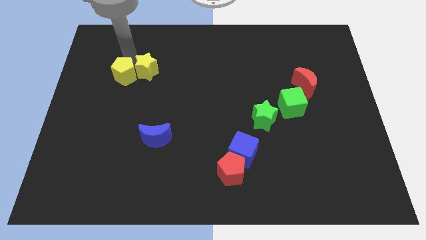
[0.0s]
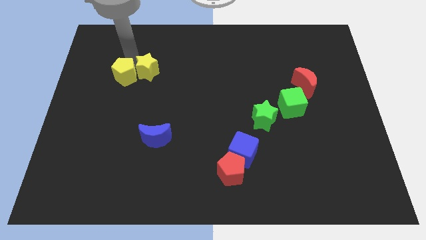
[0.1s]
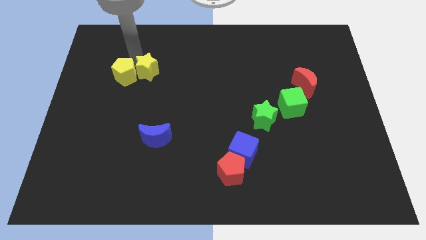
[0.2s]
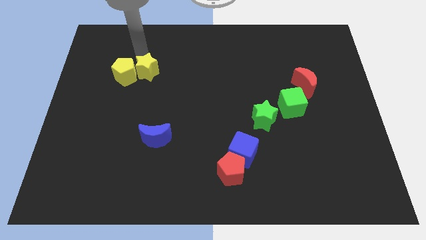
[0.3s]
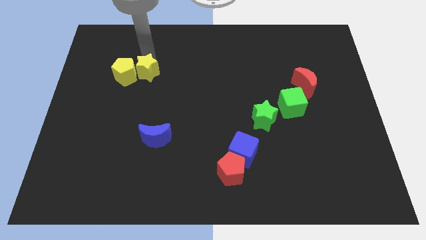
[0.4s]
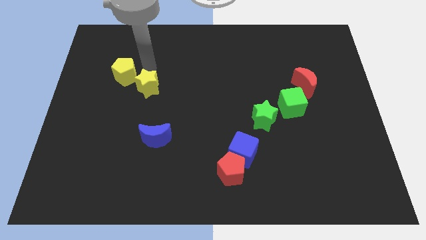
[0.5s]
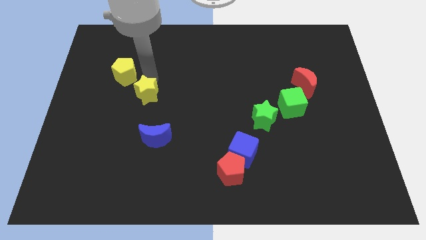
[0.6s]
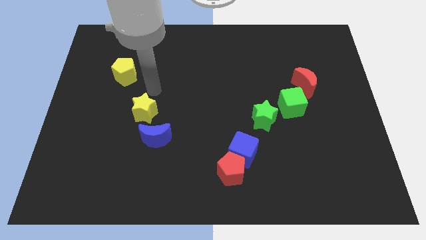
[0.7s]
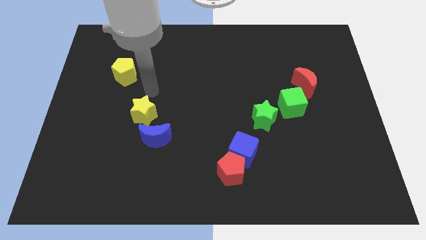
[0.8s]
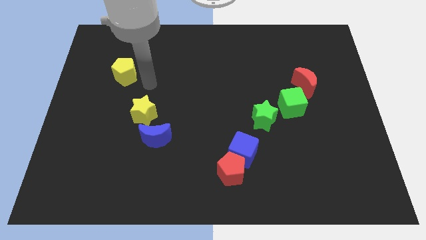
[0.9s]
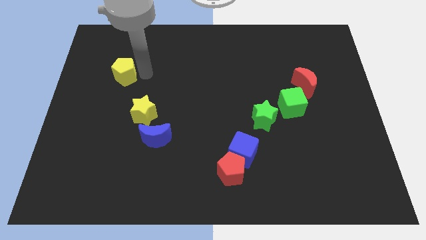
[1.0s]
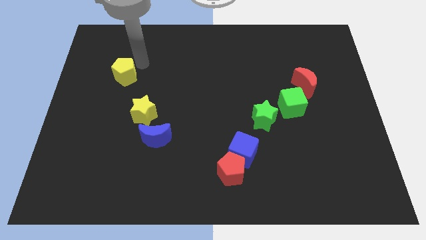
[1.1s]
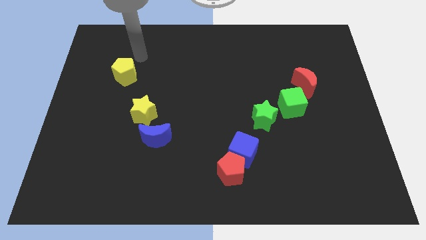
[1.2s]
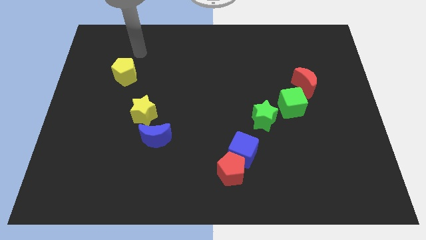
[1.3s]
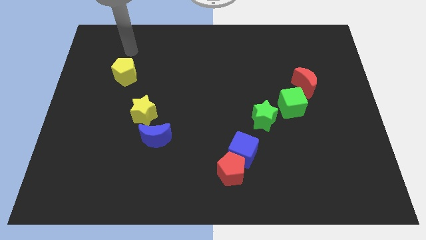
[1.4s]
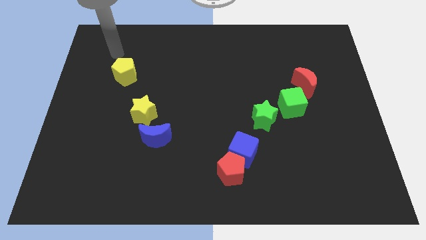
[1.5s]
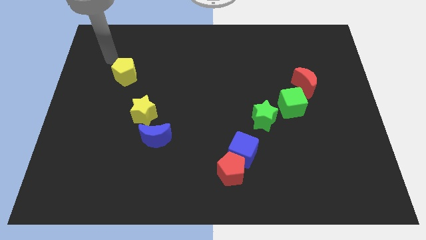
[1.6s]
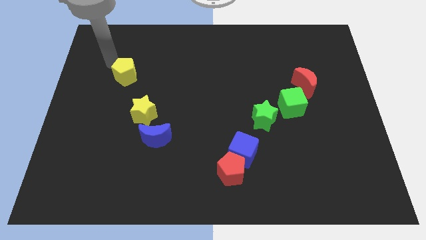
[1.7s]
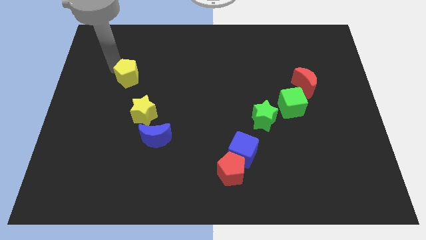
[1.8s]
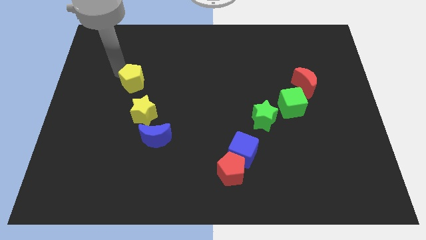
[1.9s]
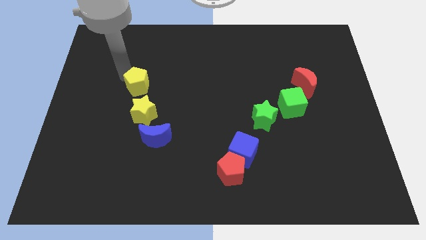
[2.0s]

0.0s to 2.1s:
move yellow star to the top of the blue crescent

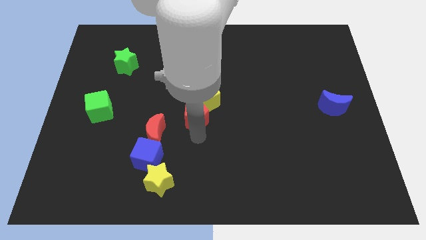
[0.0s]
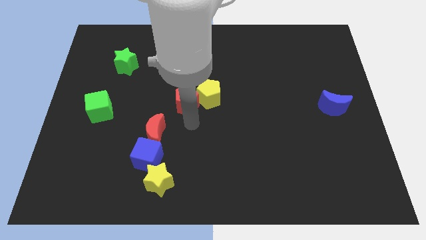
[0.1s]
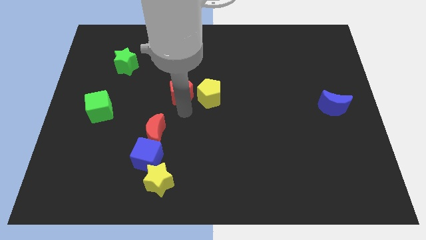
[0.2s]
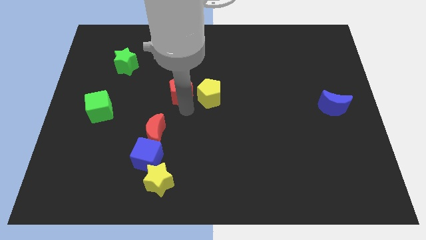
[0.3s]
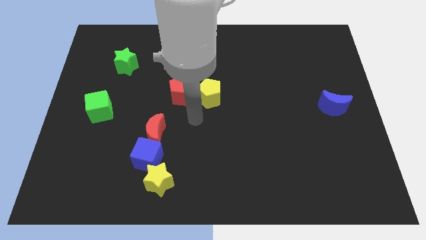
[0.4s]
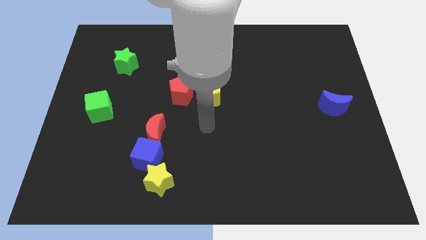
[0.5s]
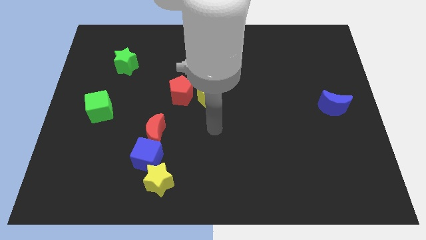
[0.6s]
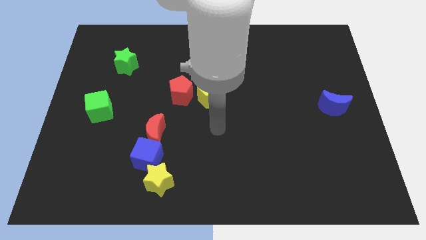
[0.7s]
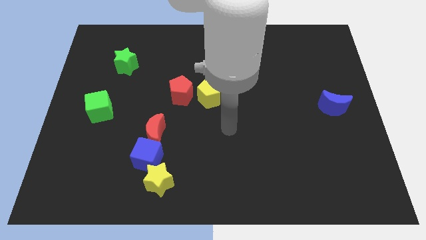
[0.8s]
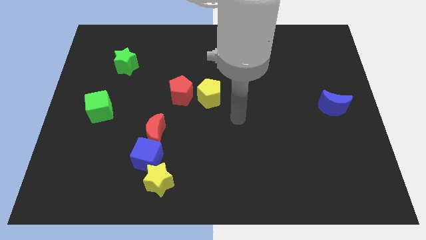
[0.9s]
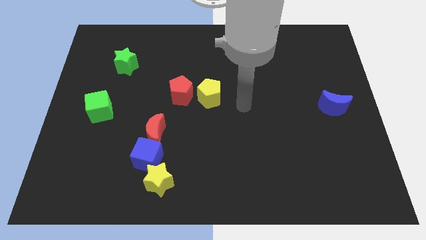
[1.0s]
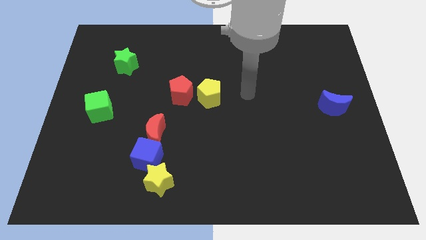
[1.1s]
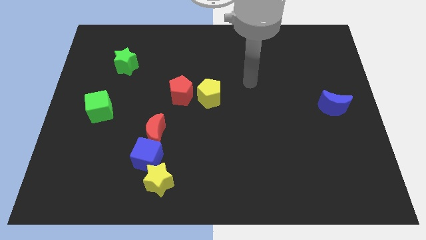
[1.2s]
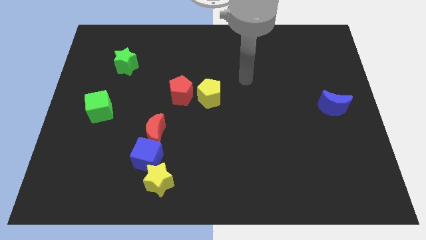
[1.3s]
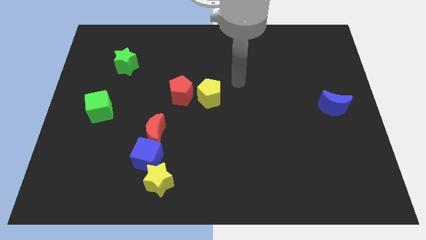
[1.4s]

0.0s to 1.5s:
move the red pentagon parallel left to the yellow pentagon

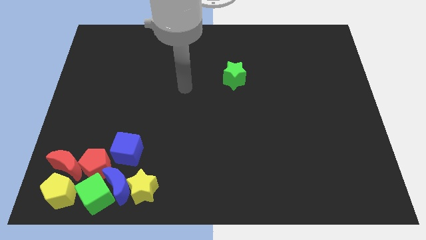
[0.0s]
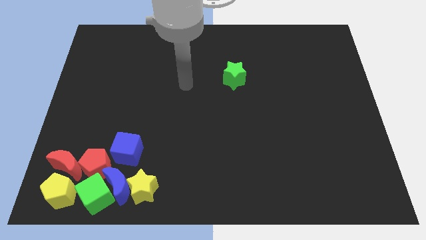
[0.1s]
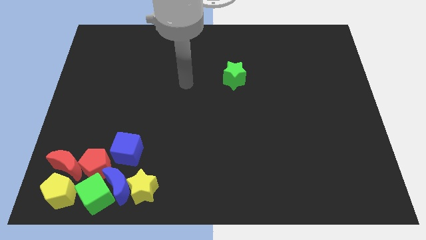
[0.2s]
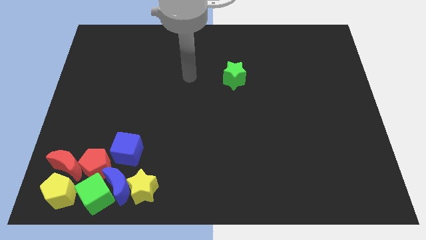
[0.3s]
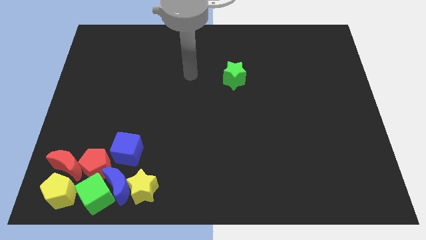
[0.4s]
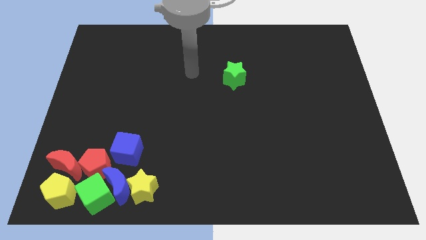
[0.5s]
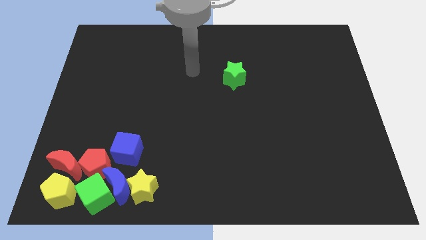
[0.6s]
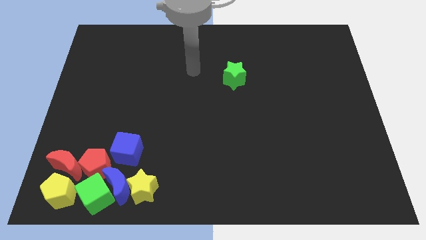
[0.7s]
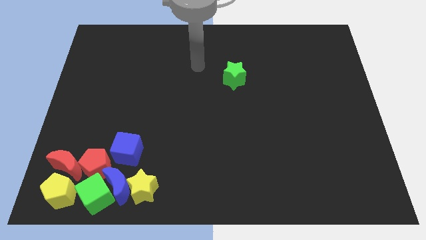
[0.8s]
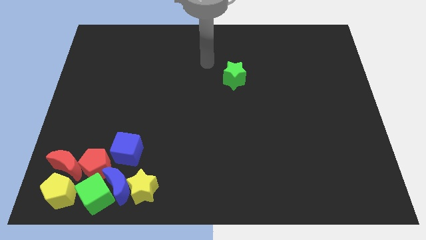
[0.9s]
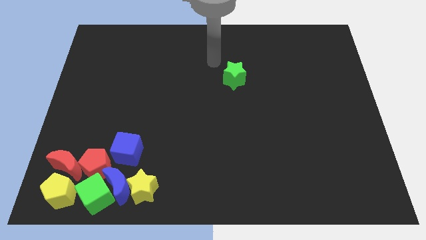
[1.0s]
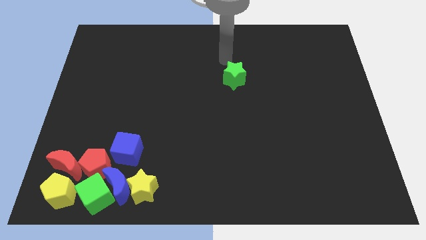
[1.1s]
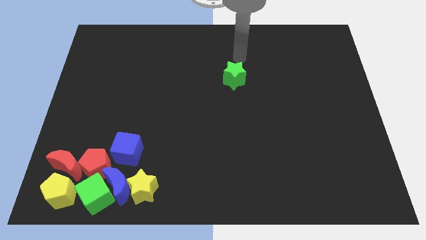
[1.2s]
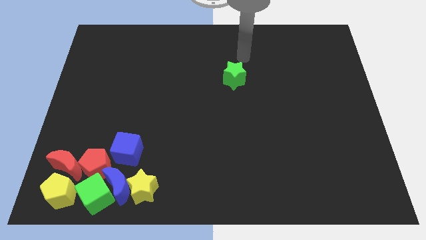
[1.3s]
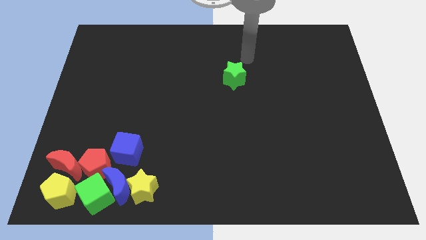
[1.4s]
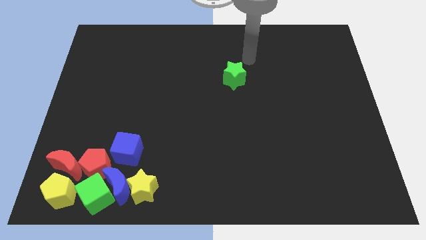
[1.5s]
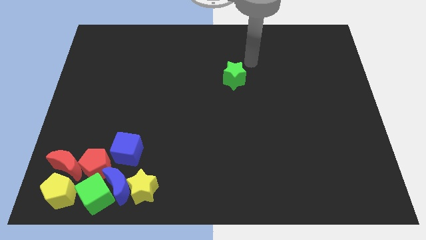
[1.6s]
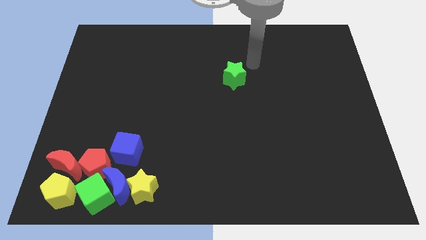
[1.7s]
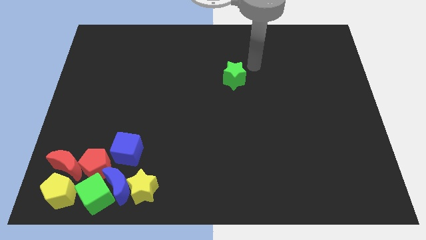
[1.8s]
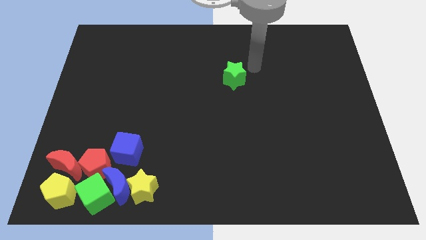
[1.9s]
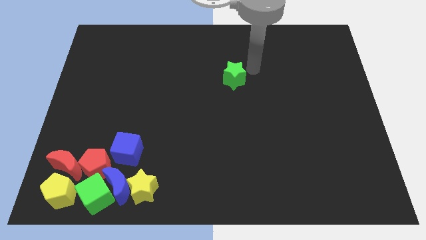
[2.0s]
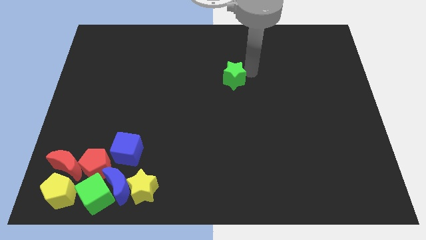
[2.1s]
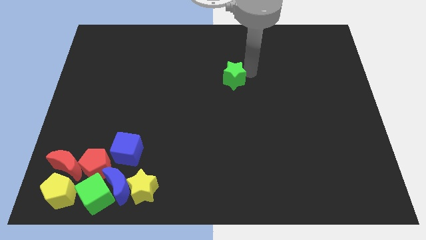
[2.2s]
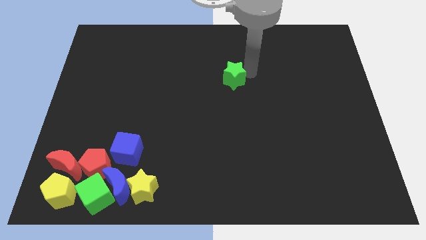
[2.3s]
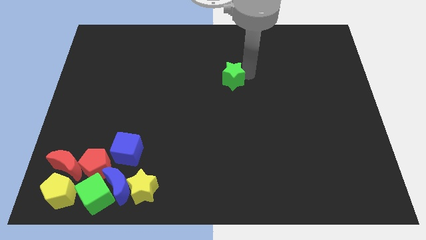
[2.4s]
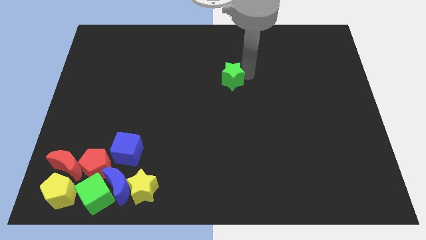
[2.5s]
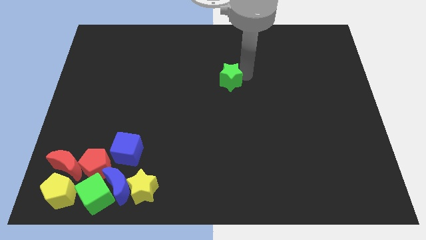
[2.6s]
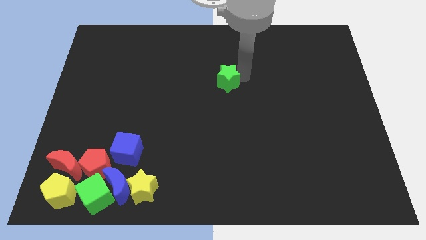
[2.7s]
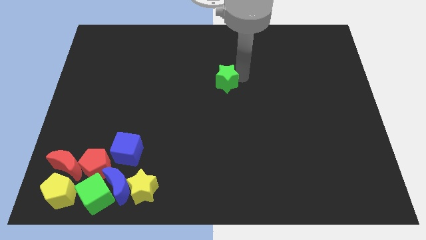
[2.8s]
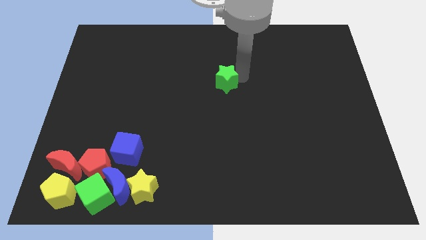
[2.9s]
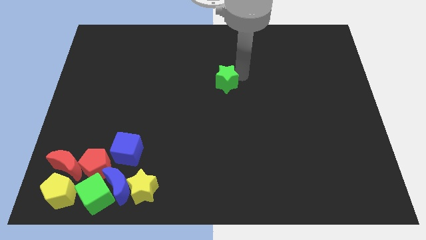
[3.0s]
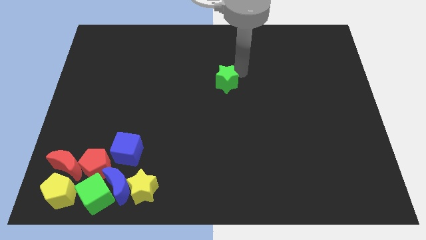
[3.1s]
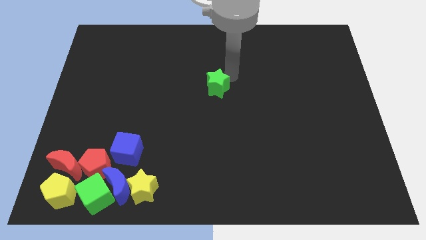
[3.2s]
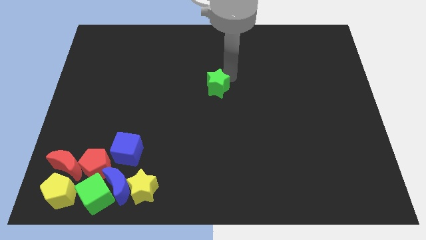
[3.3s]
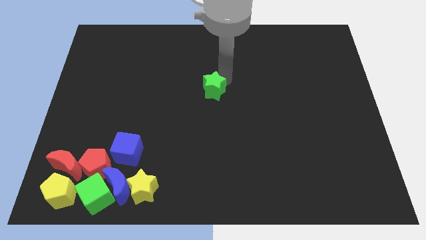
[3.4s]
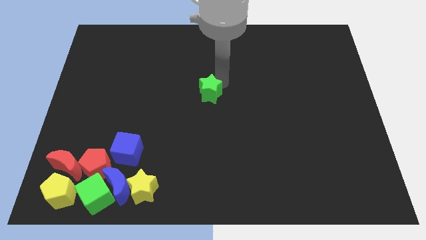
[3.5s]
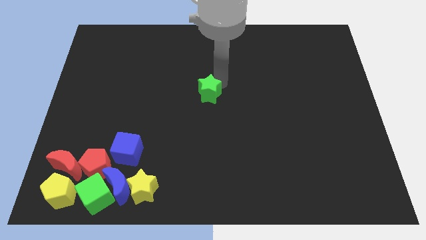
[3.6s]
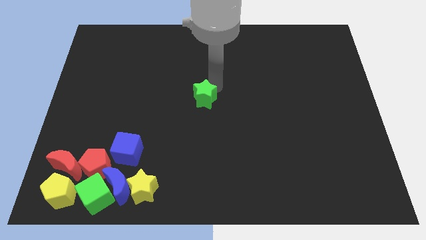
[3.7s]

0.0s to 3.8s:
move the green star towards the centre of the board

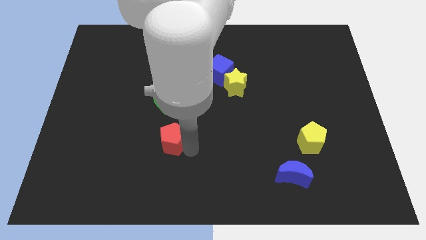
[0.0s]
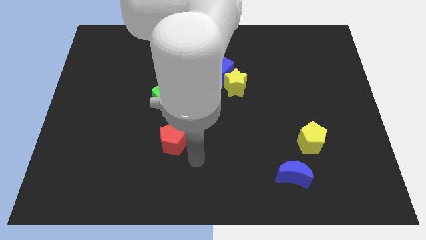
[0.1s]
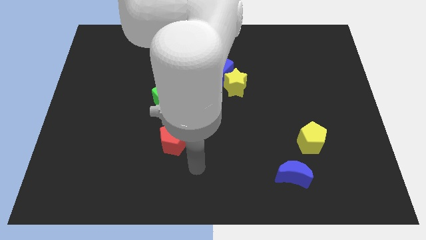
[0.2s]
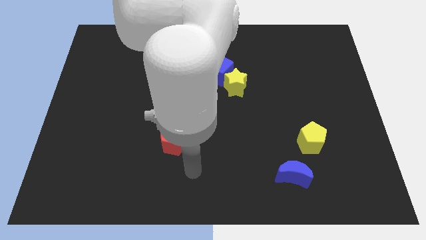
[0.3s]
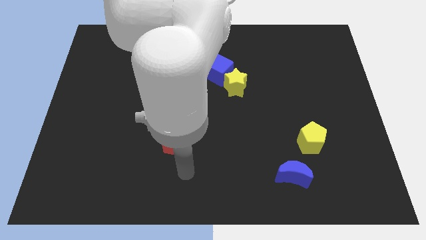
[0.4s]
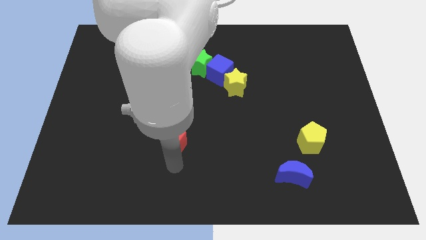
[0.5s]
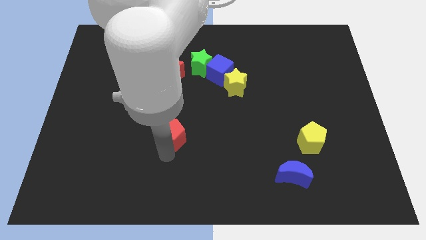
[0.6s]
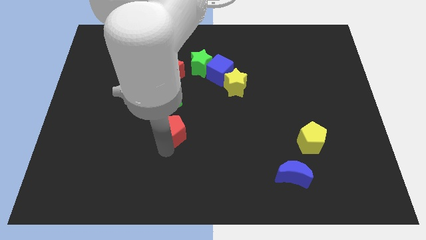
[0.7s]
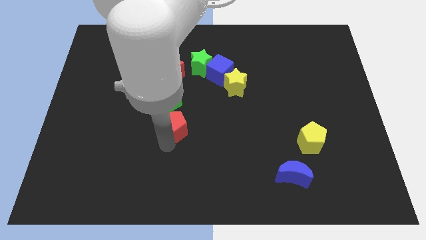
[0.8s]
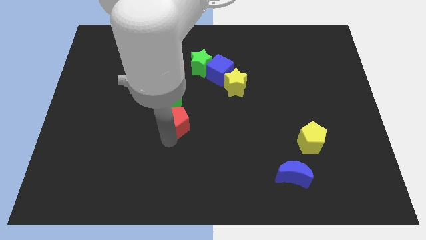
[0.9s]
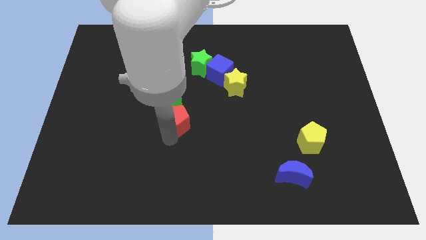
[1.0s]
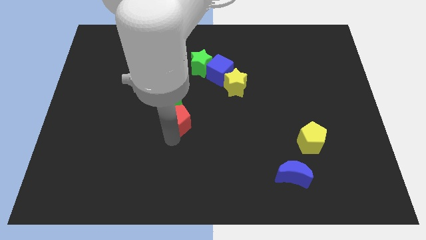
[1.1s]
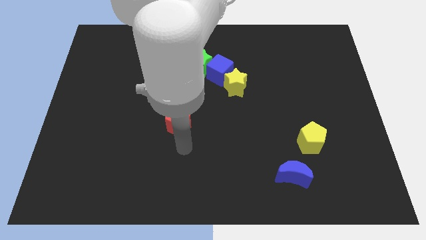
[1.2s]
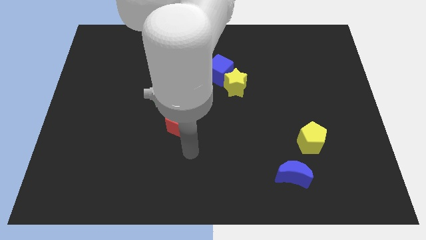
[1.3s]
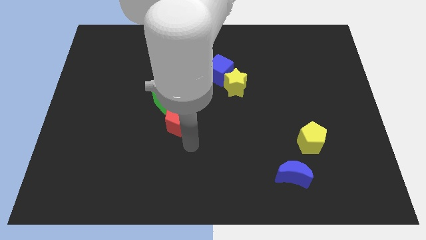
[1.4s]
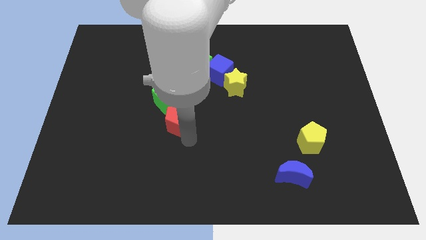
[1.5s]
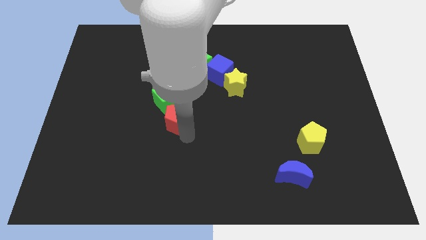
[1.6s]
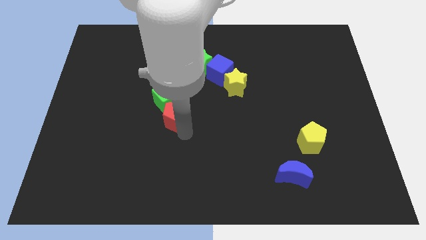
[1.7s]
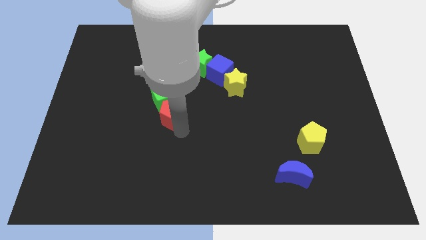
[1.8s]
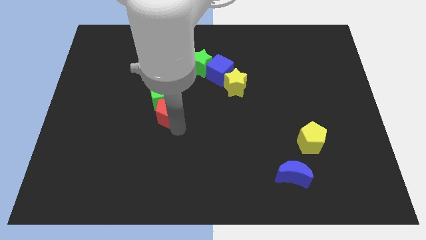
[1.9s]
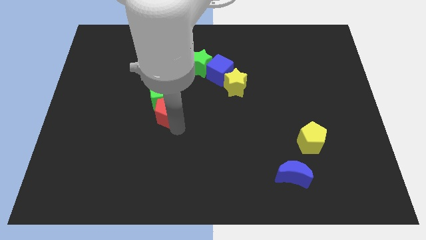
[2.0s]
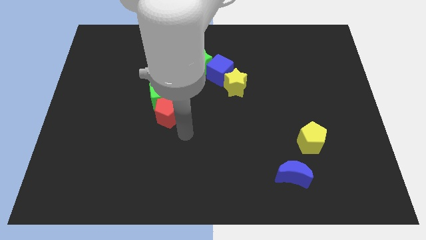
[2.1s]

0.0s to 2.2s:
push the red pentagon into the green cube
